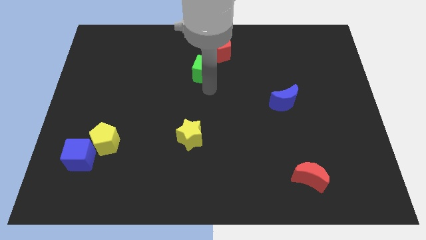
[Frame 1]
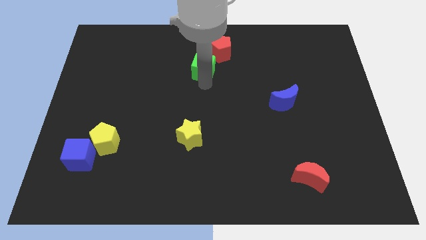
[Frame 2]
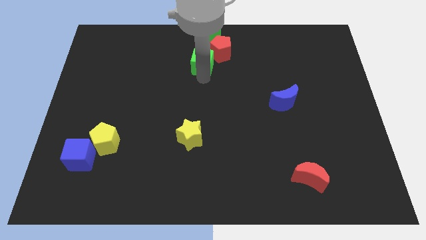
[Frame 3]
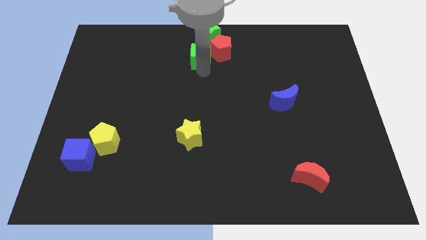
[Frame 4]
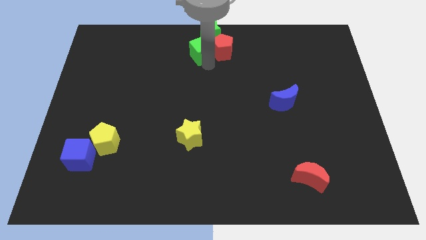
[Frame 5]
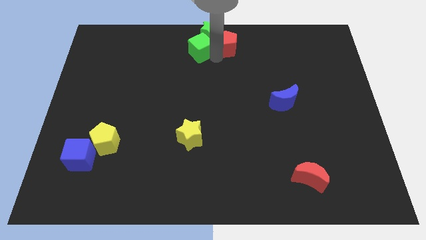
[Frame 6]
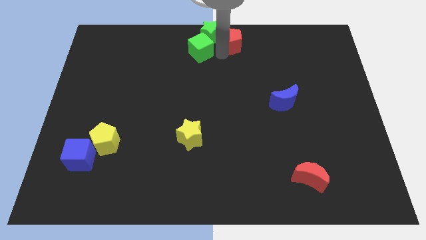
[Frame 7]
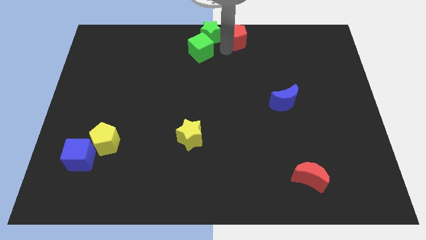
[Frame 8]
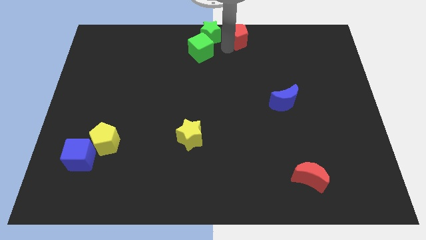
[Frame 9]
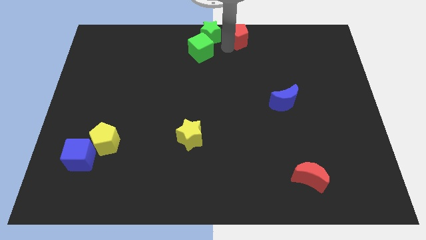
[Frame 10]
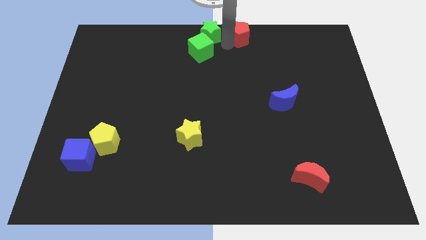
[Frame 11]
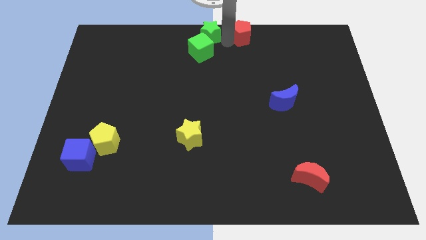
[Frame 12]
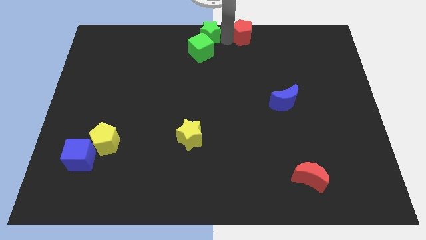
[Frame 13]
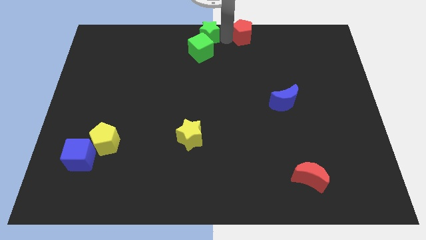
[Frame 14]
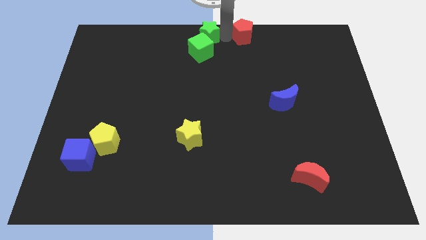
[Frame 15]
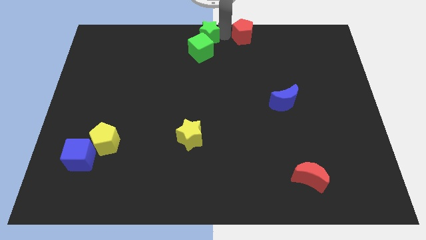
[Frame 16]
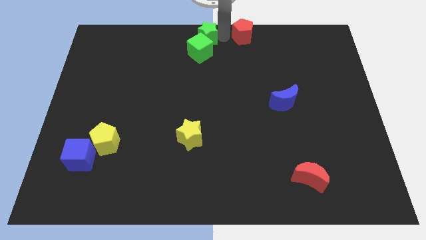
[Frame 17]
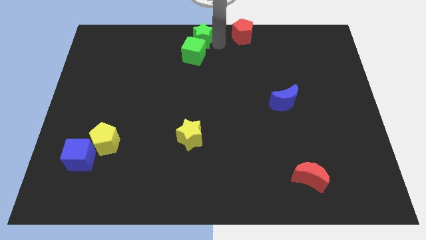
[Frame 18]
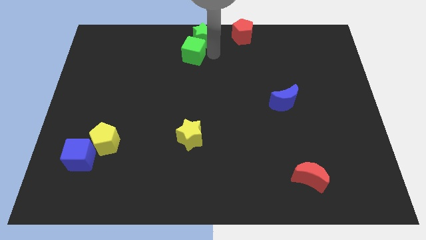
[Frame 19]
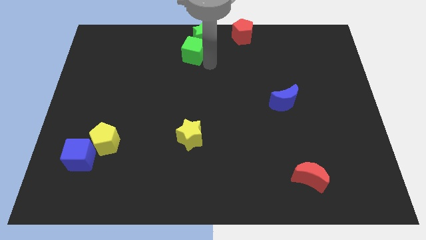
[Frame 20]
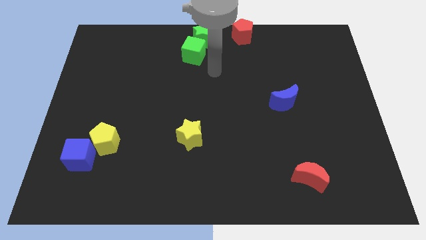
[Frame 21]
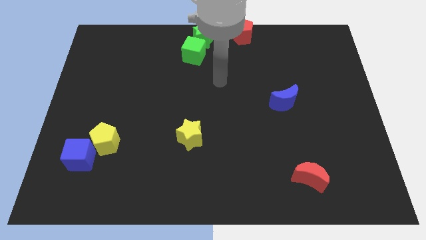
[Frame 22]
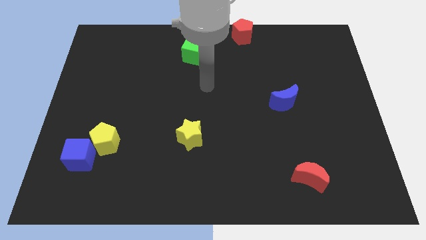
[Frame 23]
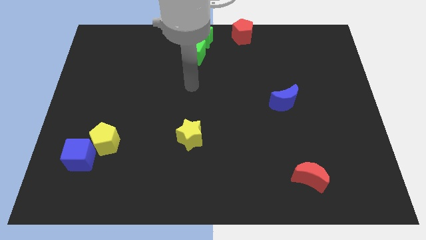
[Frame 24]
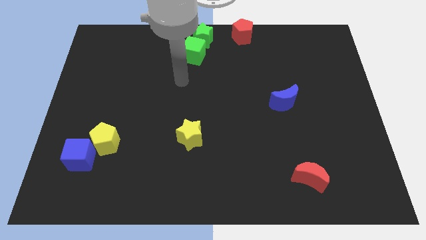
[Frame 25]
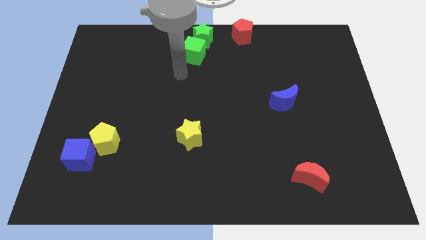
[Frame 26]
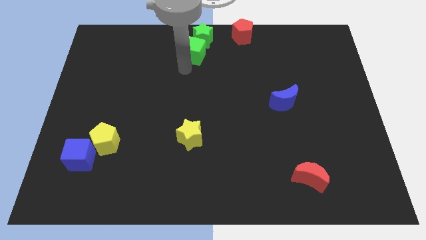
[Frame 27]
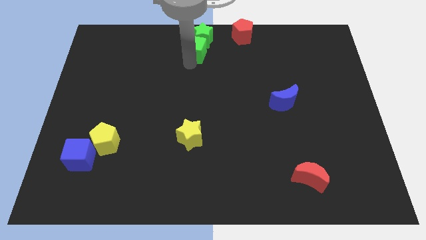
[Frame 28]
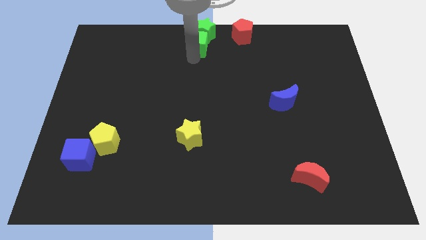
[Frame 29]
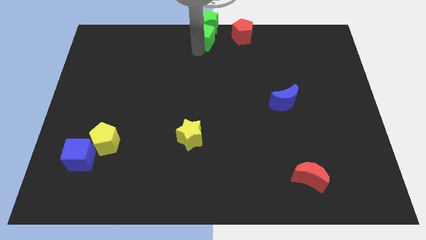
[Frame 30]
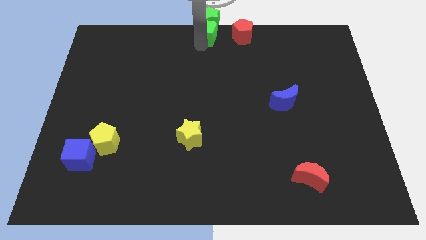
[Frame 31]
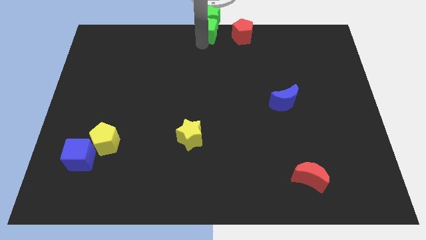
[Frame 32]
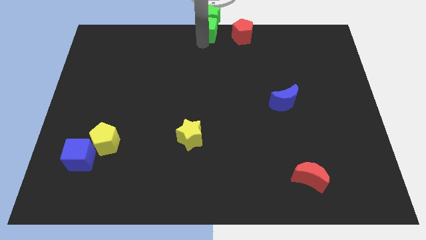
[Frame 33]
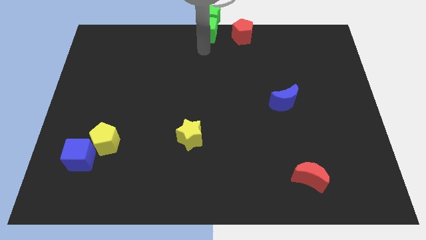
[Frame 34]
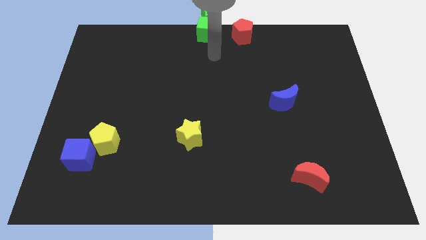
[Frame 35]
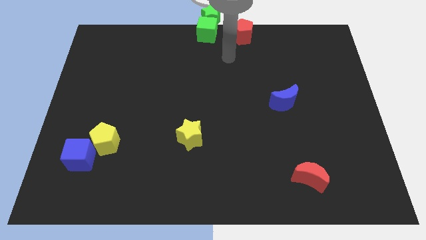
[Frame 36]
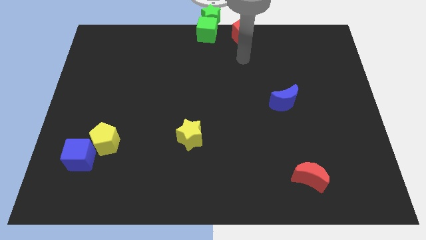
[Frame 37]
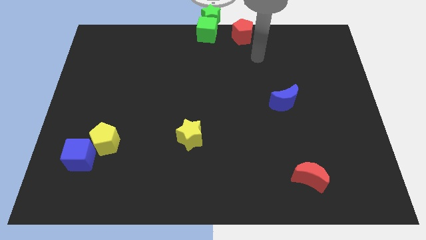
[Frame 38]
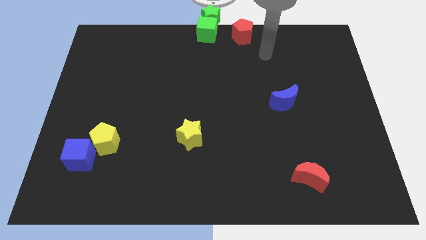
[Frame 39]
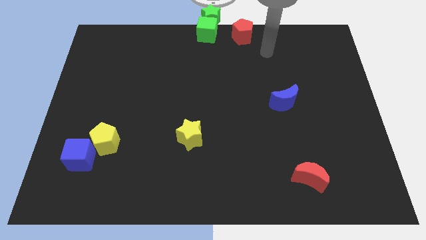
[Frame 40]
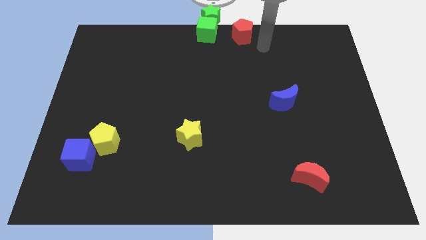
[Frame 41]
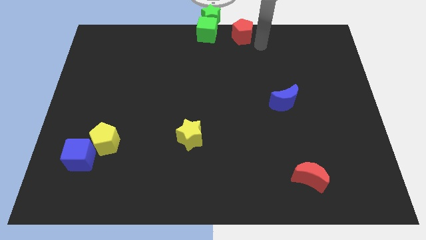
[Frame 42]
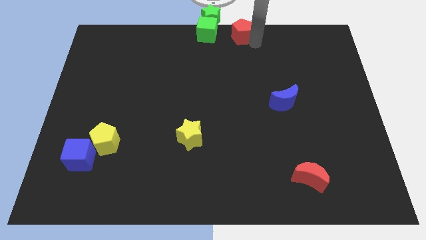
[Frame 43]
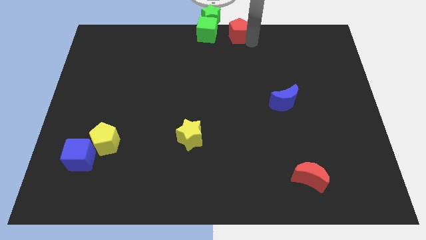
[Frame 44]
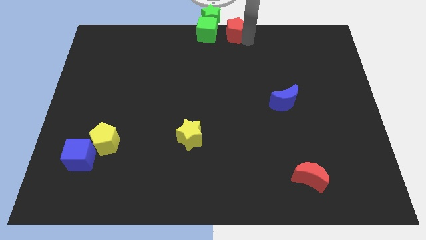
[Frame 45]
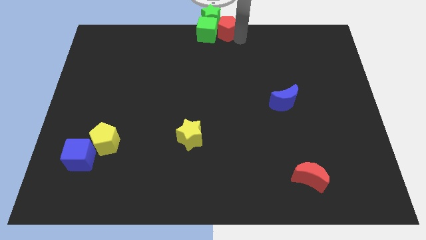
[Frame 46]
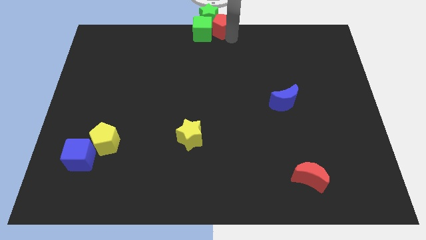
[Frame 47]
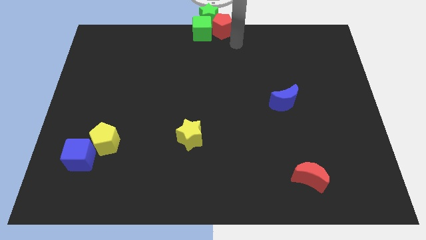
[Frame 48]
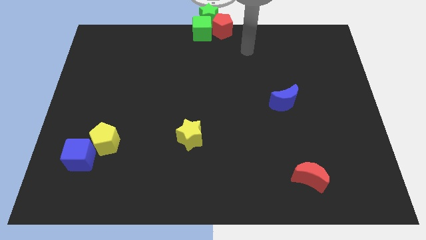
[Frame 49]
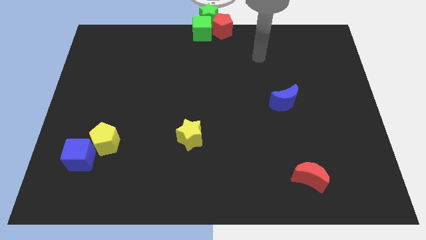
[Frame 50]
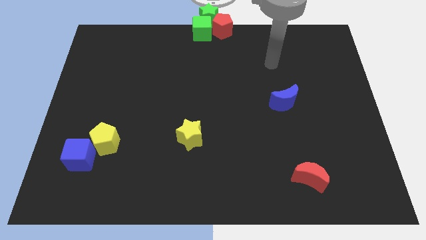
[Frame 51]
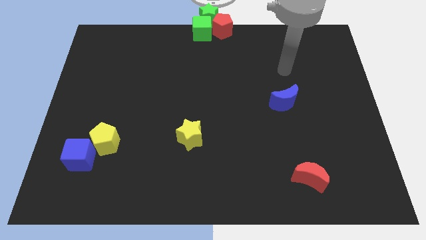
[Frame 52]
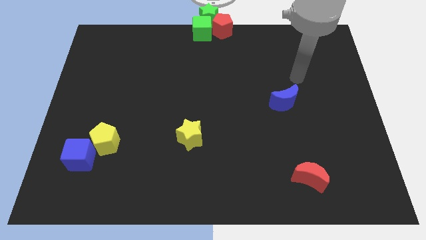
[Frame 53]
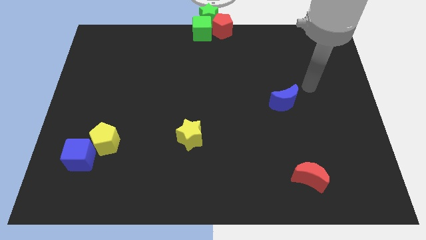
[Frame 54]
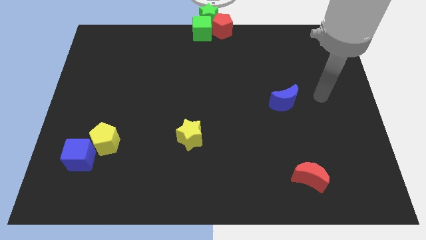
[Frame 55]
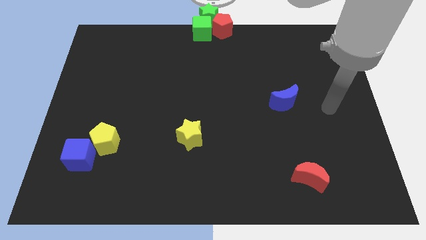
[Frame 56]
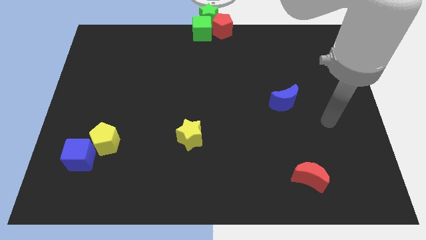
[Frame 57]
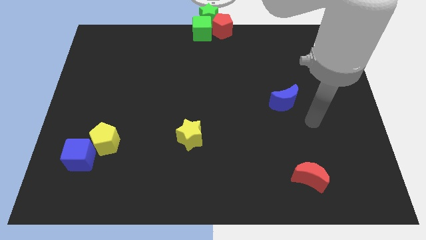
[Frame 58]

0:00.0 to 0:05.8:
join green blocks and the red pentagon at the top center of the board

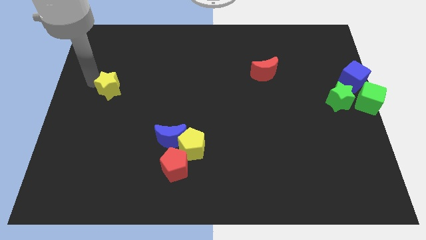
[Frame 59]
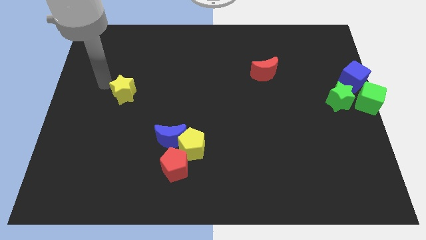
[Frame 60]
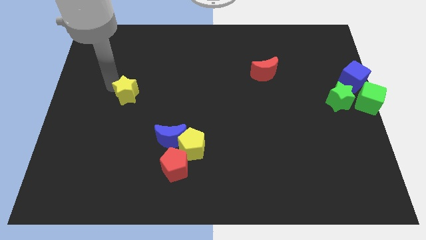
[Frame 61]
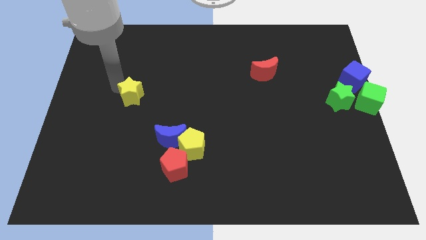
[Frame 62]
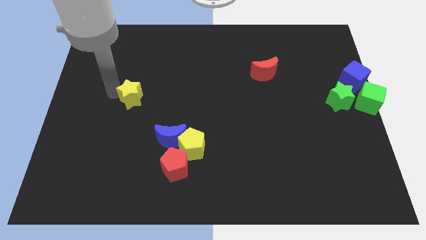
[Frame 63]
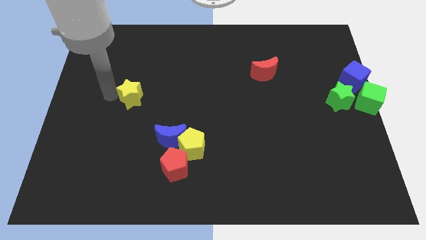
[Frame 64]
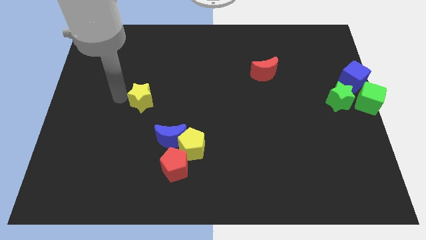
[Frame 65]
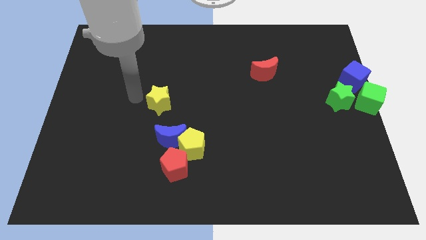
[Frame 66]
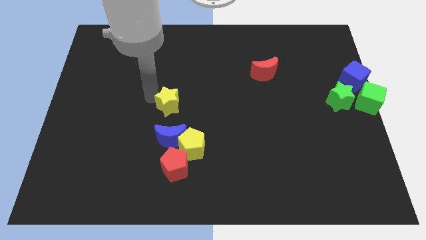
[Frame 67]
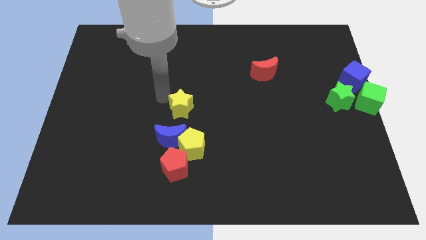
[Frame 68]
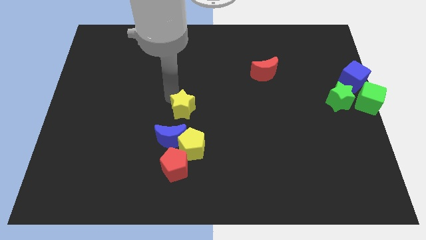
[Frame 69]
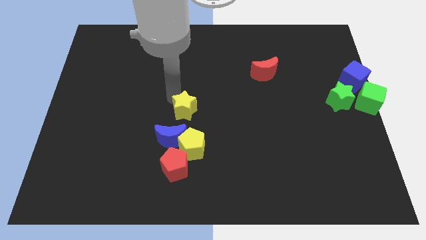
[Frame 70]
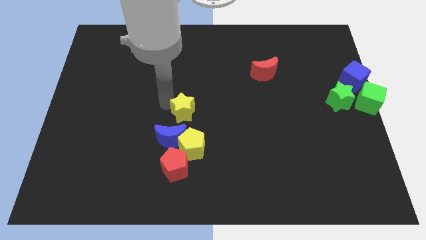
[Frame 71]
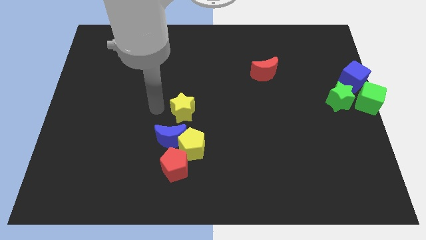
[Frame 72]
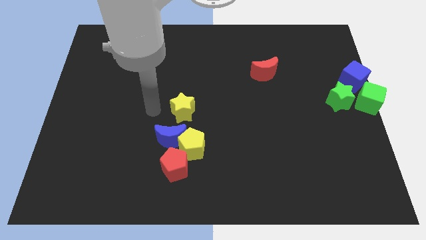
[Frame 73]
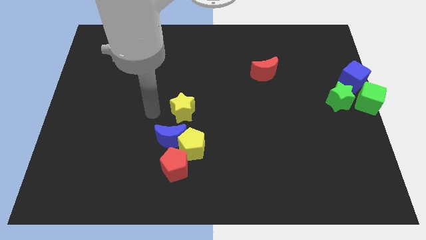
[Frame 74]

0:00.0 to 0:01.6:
push the yellow star to the top of the blue crescent

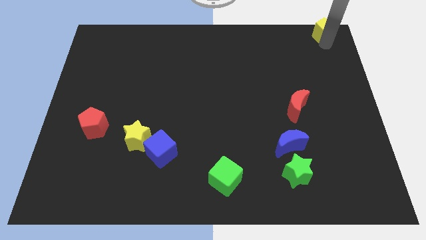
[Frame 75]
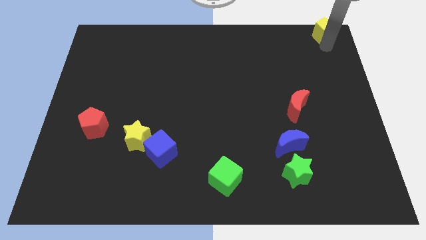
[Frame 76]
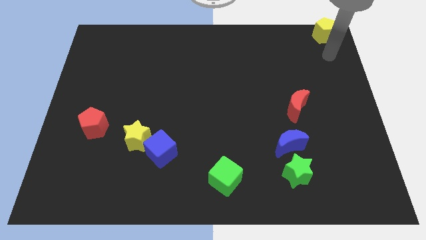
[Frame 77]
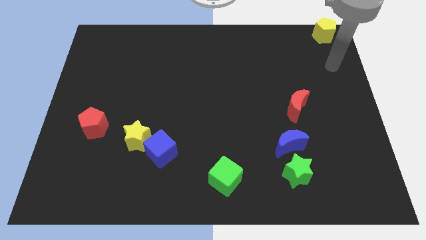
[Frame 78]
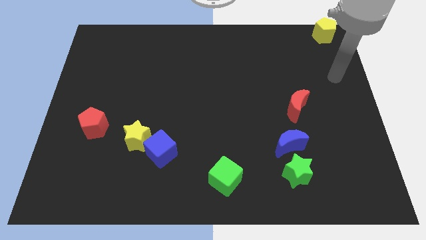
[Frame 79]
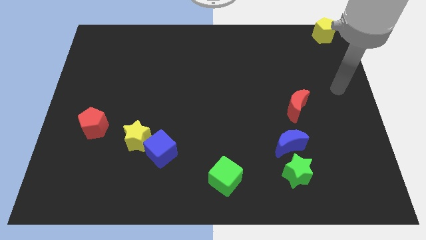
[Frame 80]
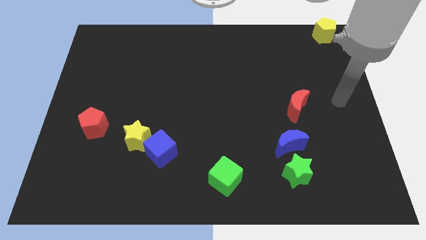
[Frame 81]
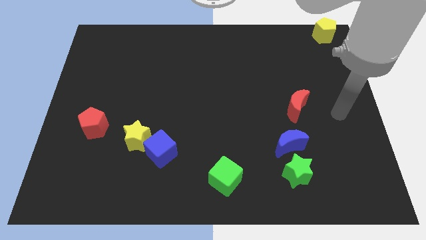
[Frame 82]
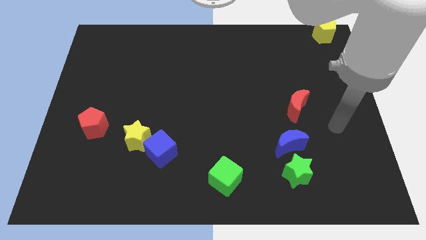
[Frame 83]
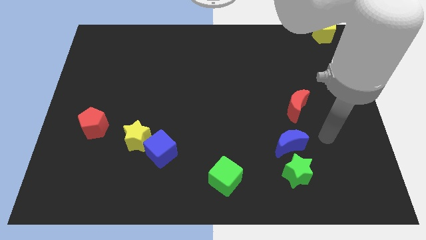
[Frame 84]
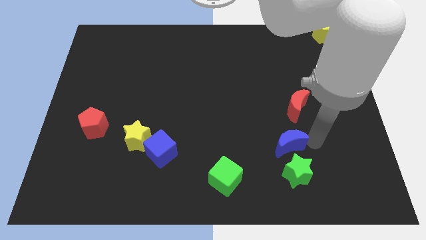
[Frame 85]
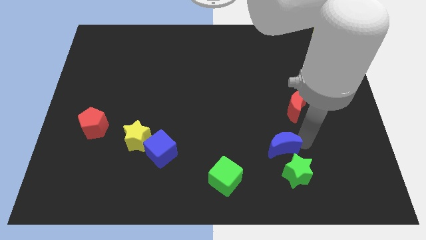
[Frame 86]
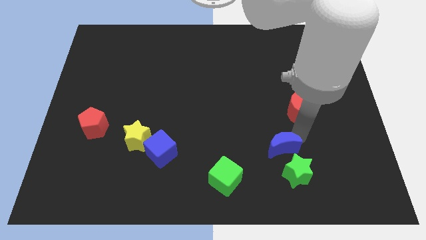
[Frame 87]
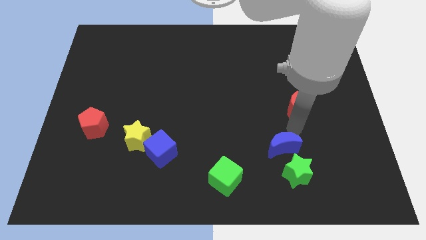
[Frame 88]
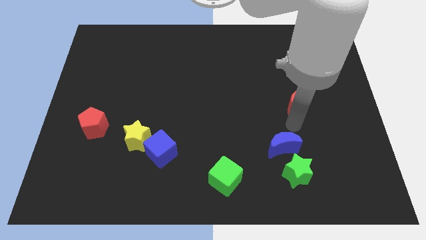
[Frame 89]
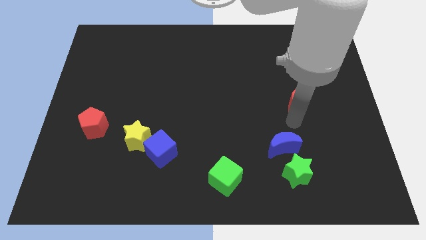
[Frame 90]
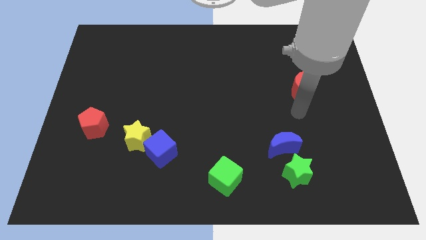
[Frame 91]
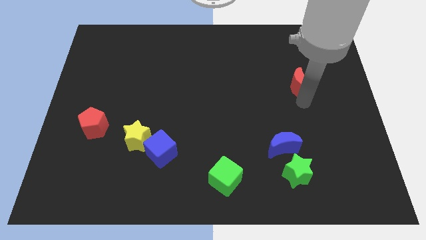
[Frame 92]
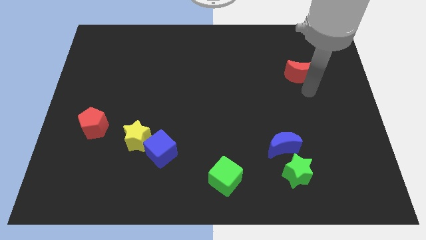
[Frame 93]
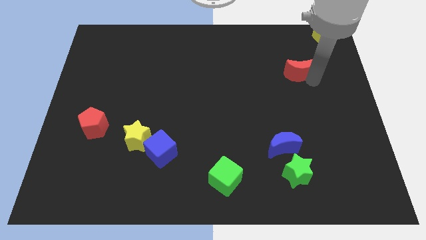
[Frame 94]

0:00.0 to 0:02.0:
push the red moon slightly towards up
